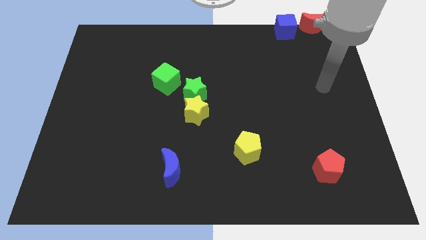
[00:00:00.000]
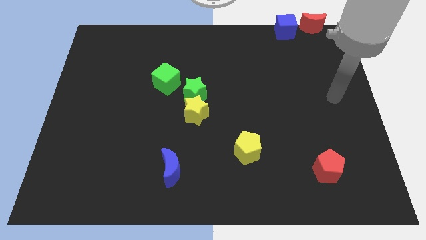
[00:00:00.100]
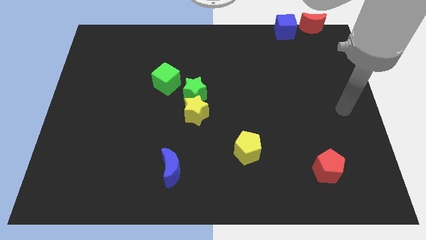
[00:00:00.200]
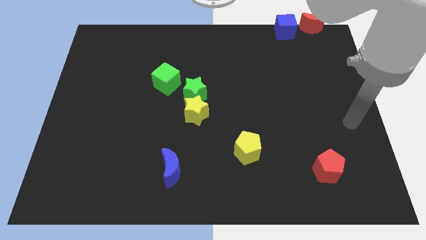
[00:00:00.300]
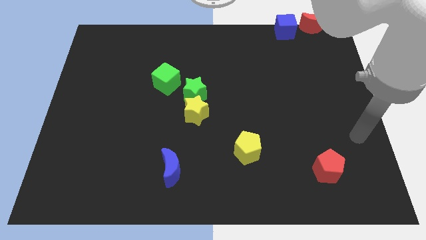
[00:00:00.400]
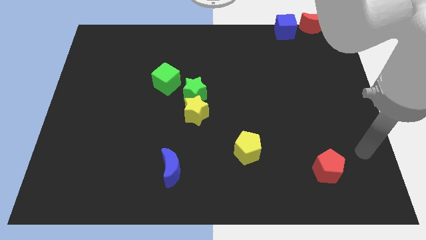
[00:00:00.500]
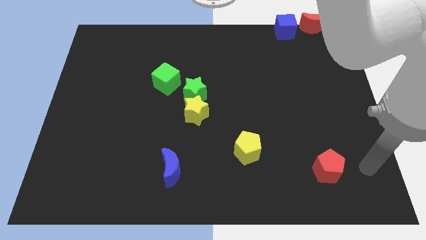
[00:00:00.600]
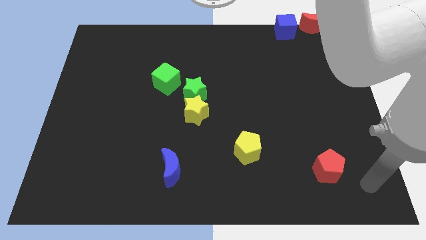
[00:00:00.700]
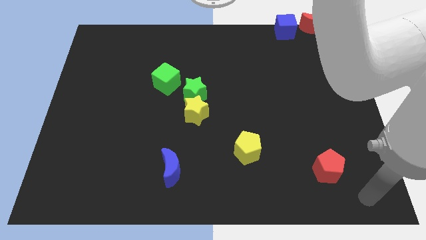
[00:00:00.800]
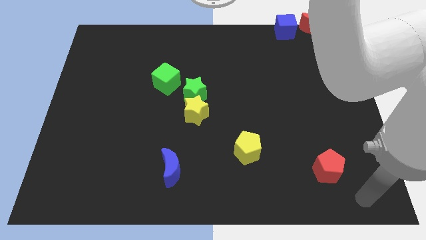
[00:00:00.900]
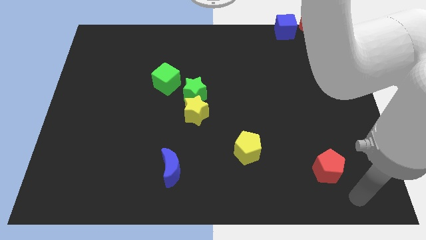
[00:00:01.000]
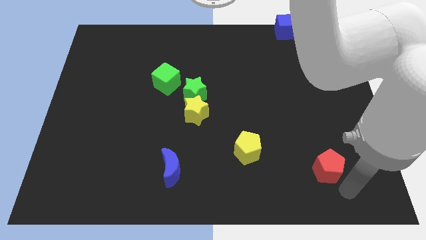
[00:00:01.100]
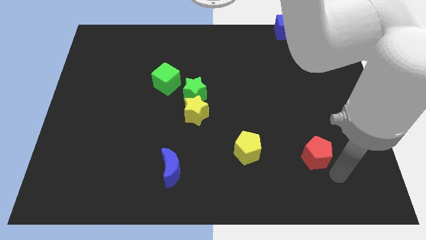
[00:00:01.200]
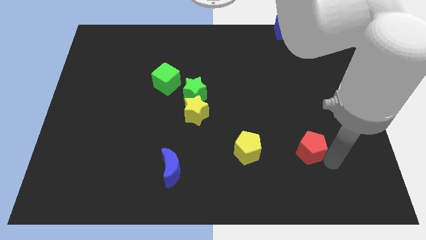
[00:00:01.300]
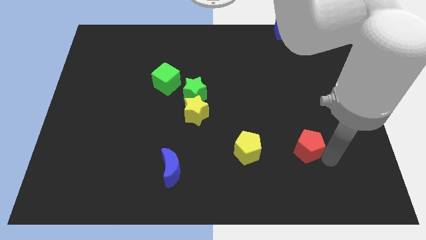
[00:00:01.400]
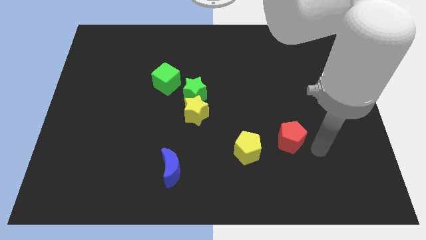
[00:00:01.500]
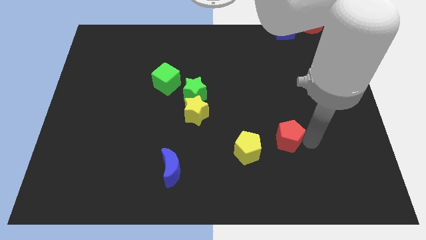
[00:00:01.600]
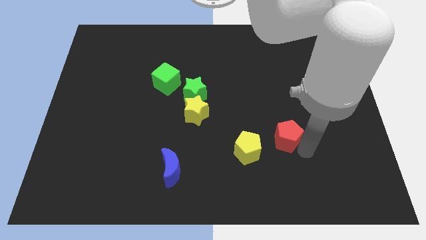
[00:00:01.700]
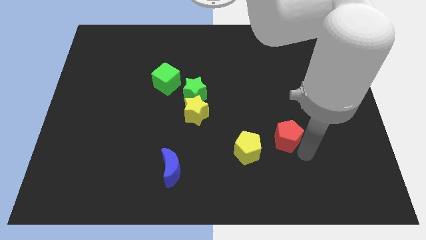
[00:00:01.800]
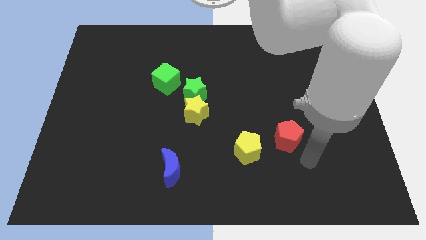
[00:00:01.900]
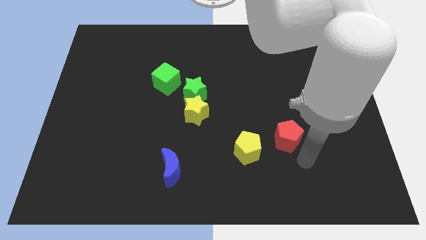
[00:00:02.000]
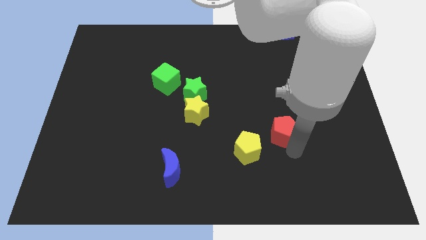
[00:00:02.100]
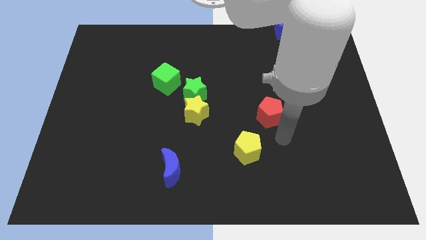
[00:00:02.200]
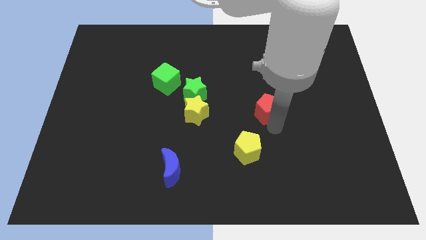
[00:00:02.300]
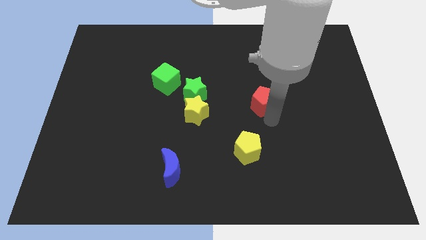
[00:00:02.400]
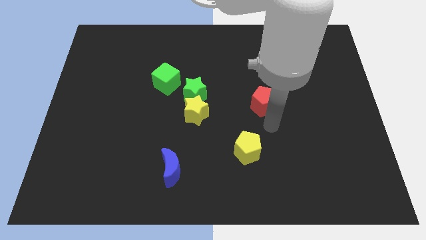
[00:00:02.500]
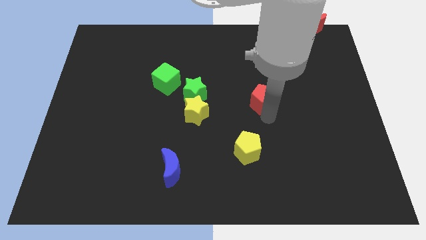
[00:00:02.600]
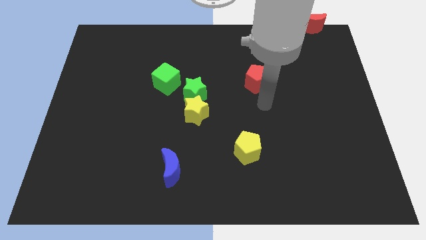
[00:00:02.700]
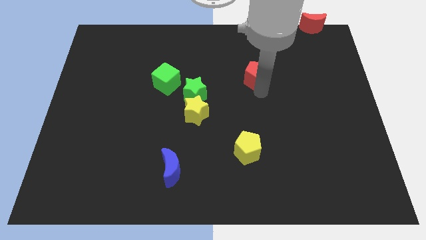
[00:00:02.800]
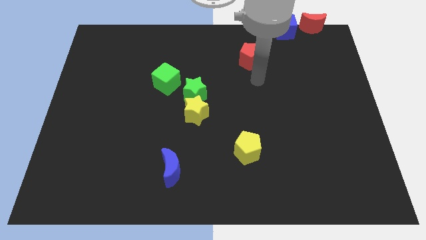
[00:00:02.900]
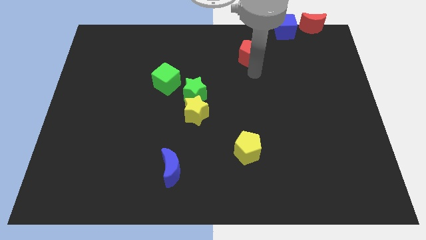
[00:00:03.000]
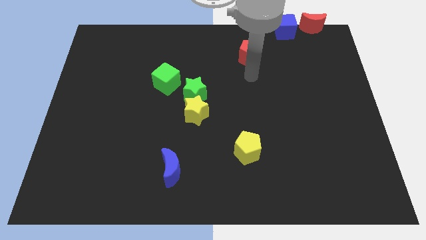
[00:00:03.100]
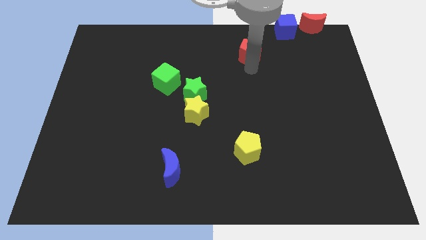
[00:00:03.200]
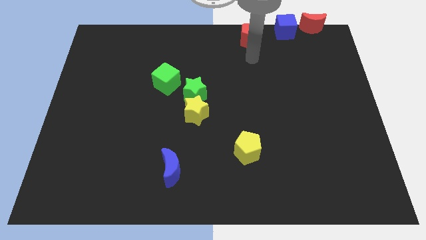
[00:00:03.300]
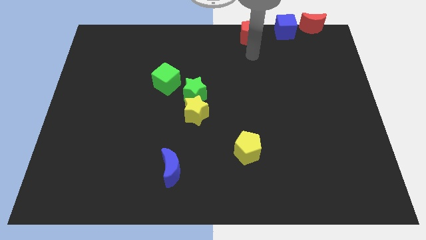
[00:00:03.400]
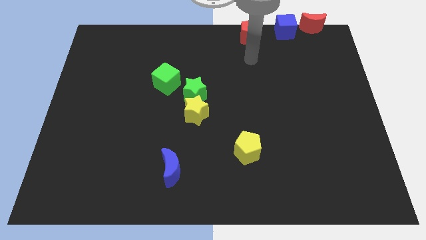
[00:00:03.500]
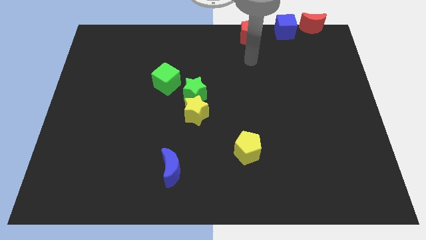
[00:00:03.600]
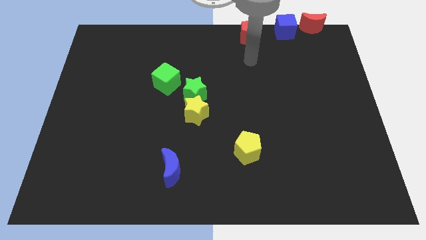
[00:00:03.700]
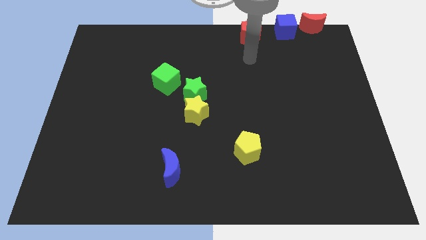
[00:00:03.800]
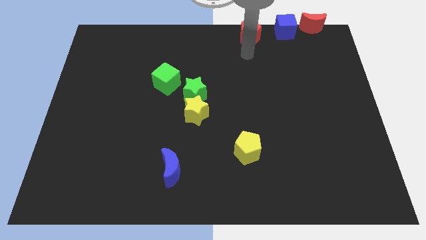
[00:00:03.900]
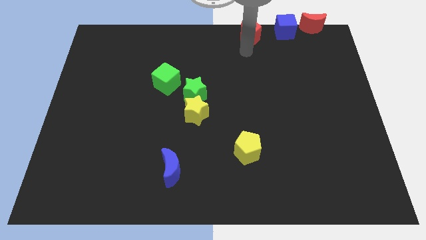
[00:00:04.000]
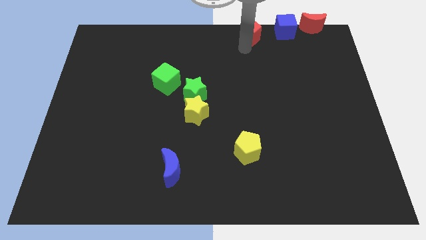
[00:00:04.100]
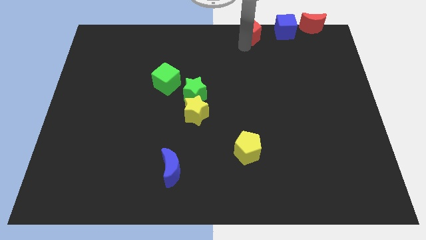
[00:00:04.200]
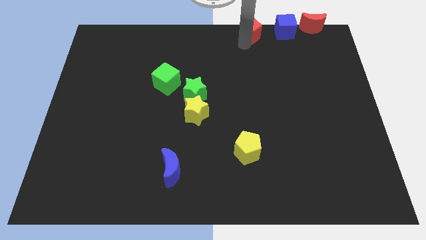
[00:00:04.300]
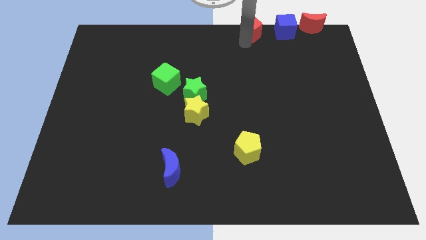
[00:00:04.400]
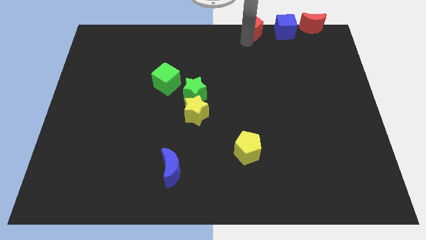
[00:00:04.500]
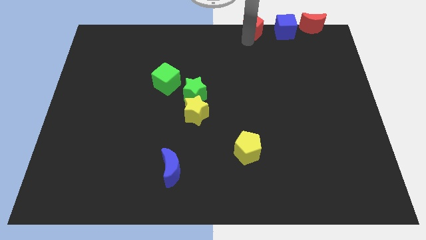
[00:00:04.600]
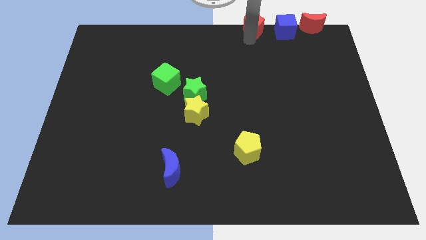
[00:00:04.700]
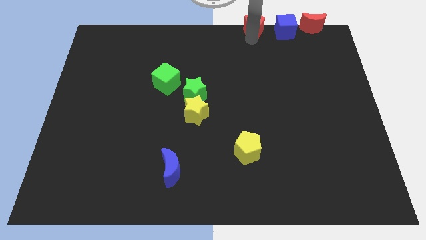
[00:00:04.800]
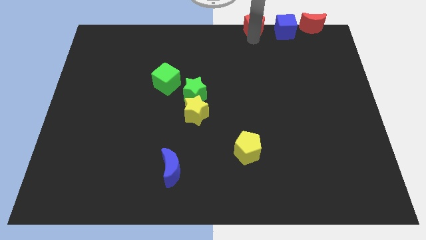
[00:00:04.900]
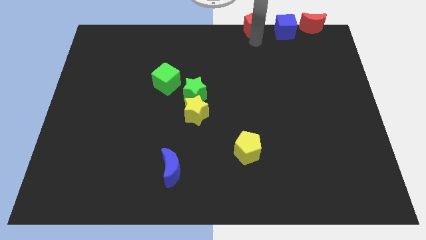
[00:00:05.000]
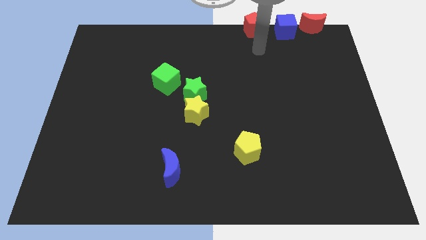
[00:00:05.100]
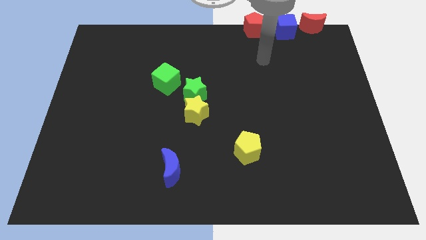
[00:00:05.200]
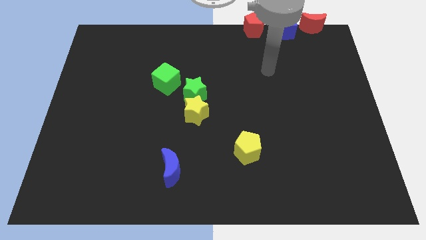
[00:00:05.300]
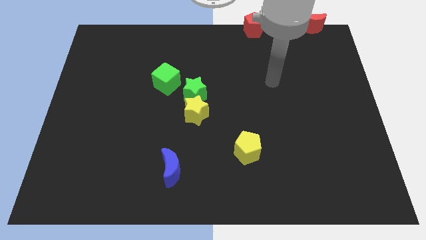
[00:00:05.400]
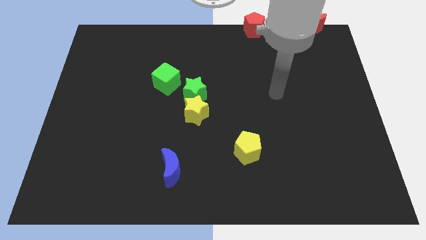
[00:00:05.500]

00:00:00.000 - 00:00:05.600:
place the red pentagon left to the blue cube

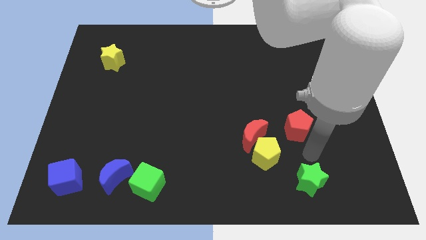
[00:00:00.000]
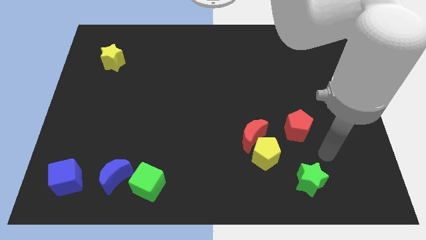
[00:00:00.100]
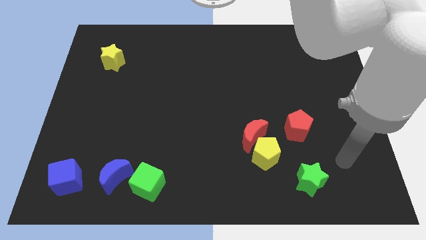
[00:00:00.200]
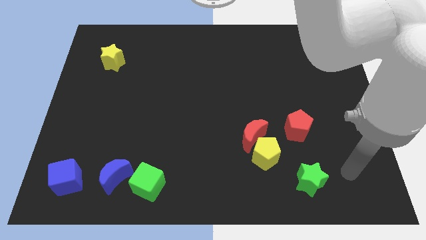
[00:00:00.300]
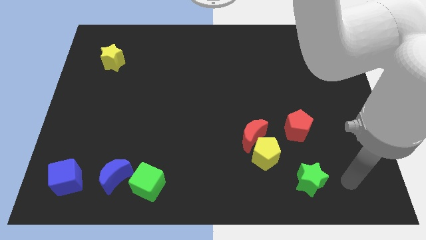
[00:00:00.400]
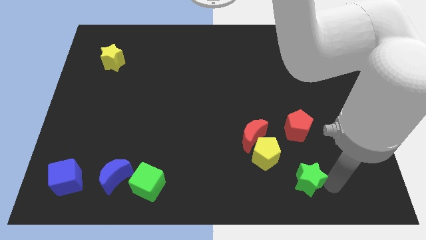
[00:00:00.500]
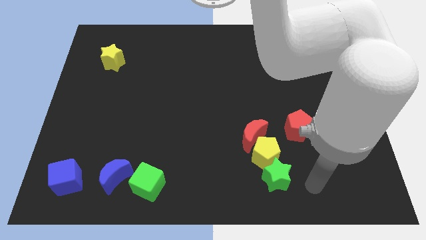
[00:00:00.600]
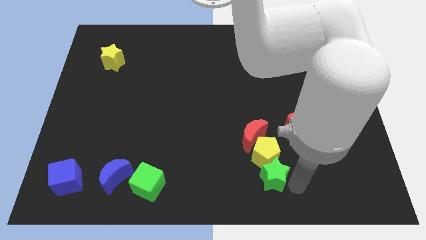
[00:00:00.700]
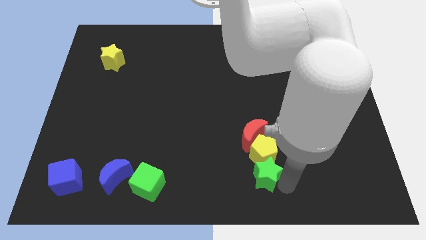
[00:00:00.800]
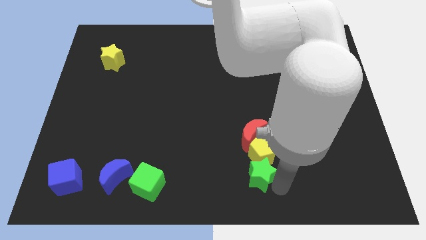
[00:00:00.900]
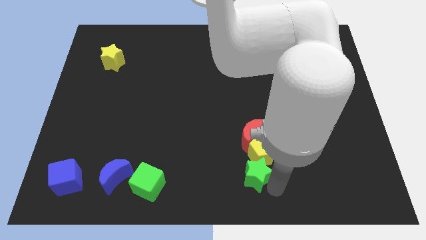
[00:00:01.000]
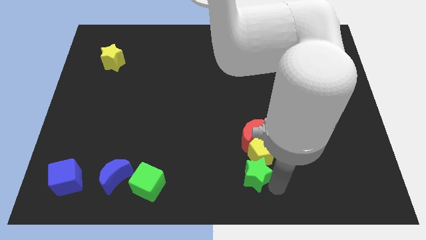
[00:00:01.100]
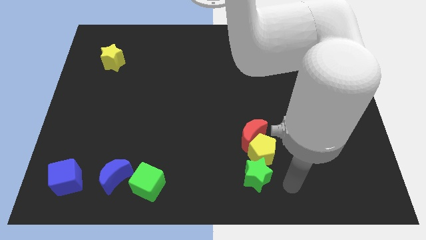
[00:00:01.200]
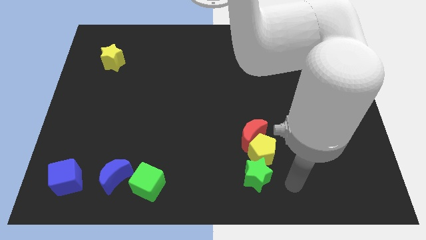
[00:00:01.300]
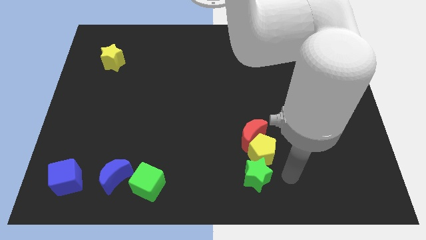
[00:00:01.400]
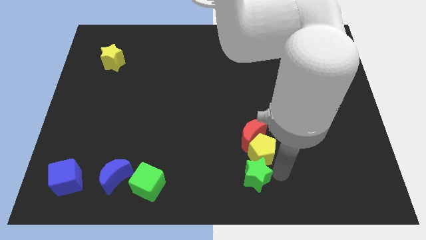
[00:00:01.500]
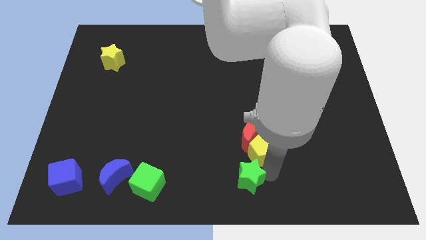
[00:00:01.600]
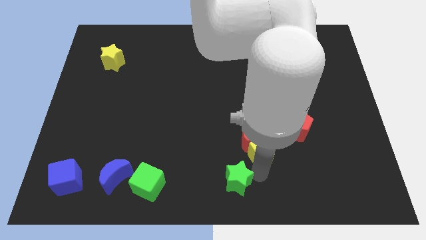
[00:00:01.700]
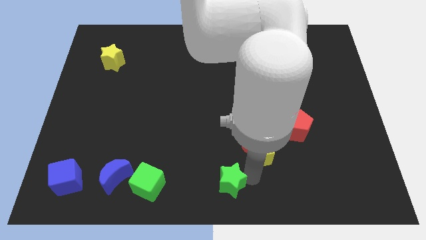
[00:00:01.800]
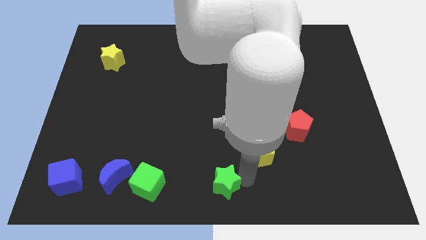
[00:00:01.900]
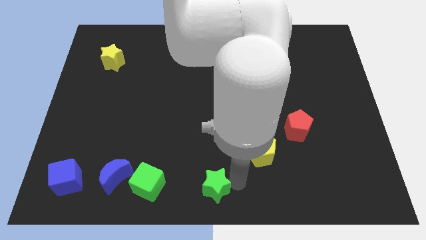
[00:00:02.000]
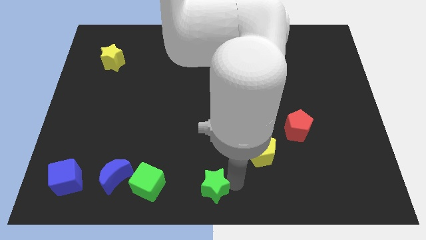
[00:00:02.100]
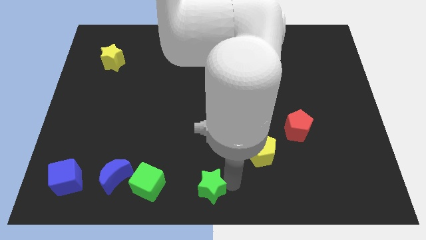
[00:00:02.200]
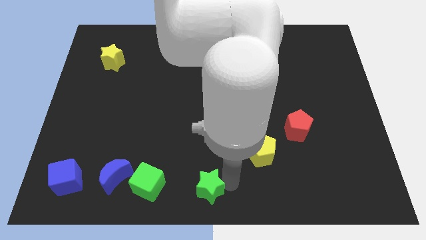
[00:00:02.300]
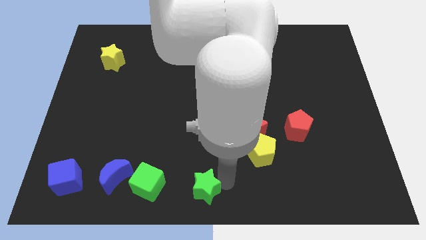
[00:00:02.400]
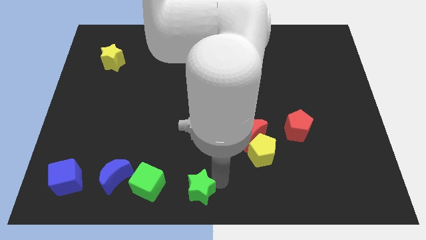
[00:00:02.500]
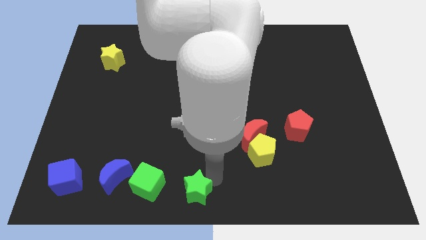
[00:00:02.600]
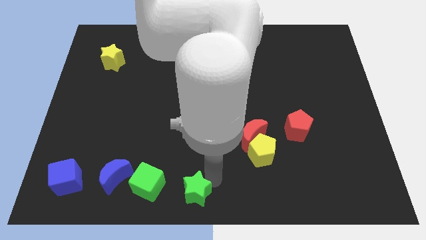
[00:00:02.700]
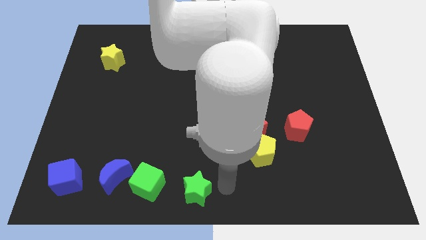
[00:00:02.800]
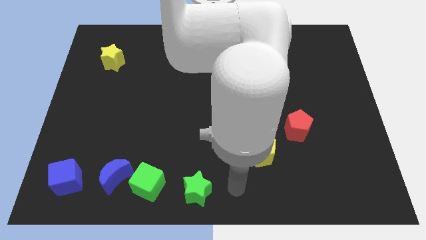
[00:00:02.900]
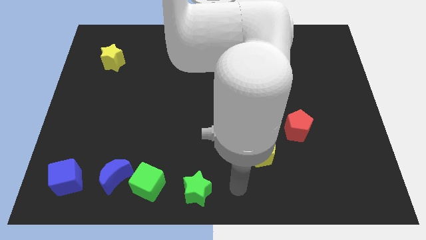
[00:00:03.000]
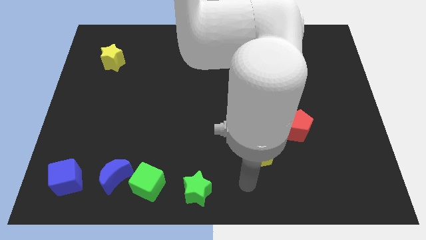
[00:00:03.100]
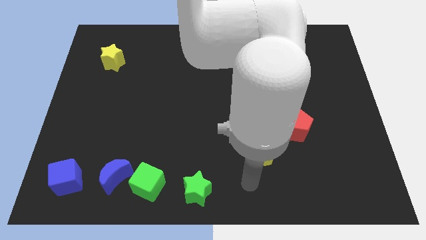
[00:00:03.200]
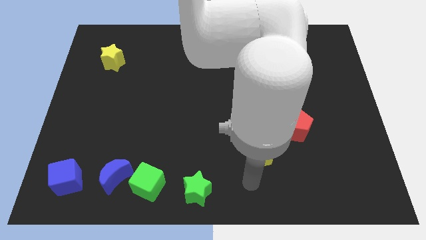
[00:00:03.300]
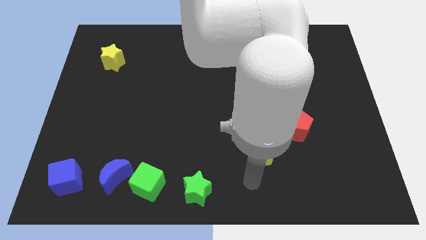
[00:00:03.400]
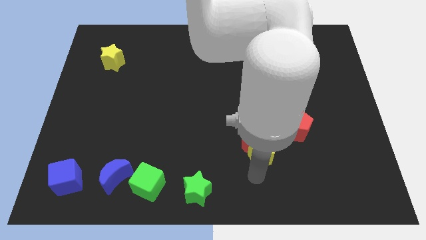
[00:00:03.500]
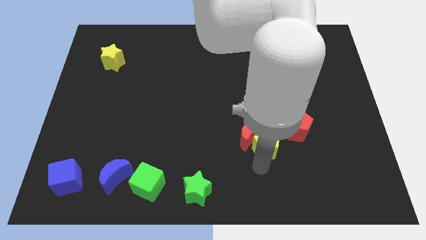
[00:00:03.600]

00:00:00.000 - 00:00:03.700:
arrange the green star at the right side of the green cube horizontally
